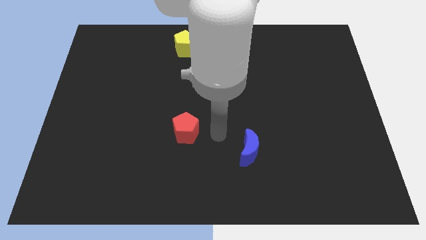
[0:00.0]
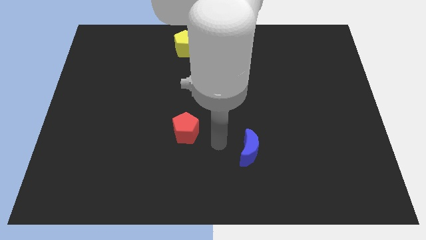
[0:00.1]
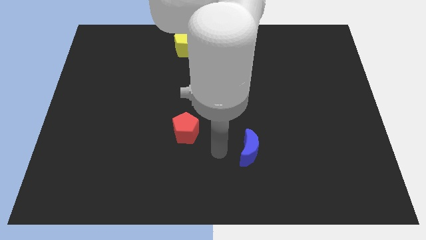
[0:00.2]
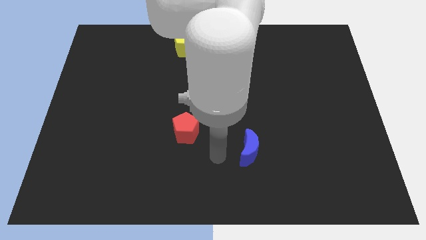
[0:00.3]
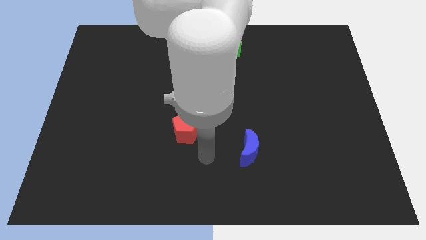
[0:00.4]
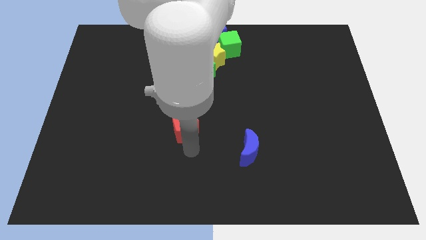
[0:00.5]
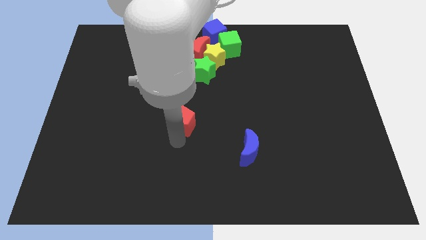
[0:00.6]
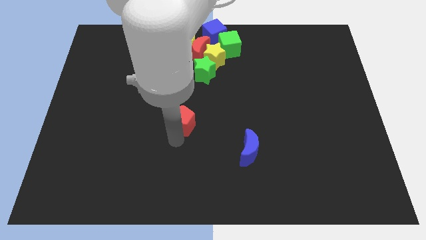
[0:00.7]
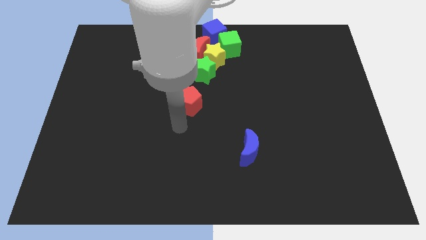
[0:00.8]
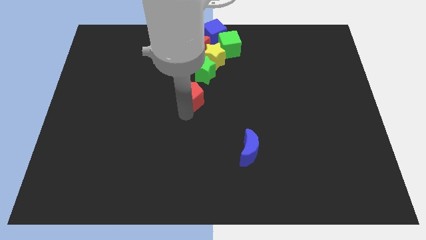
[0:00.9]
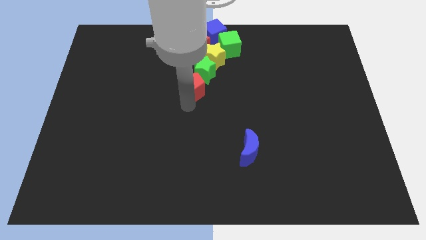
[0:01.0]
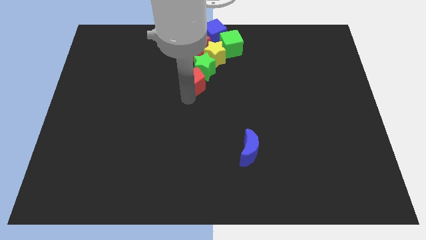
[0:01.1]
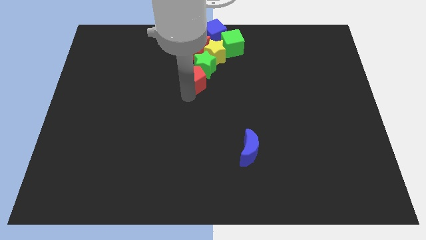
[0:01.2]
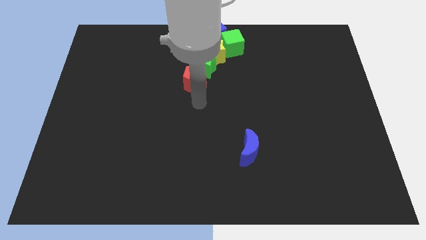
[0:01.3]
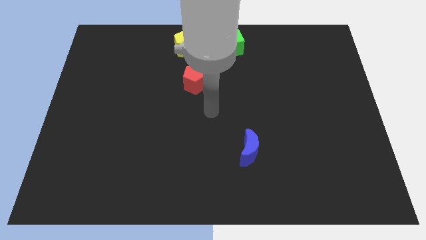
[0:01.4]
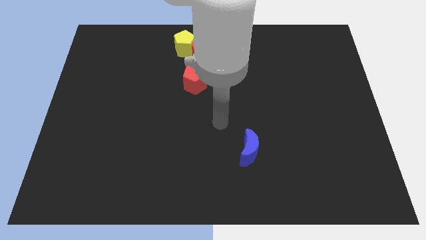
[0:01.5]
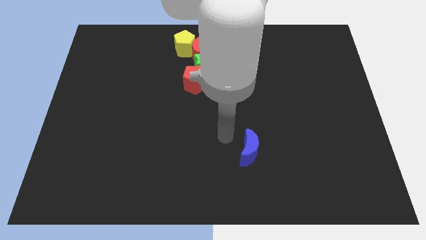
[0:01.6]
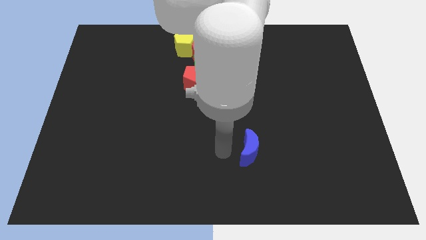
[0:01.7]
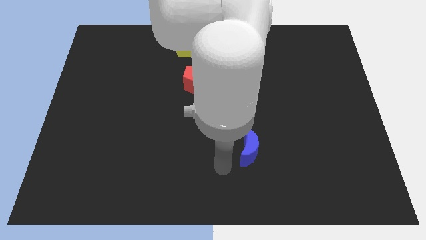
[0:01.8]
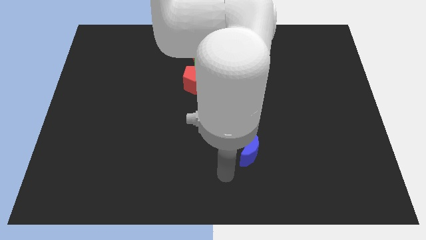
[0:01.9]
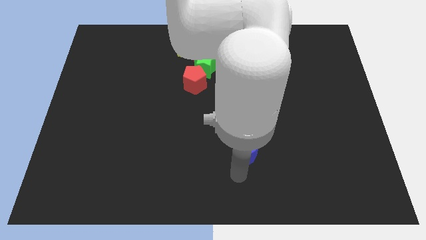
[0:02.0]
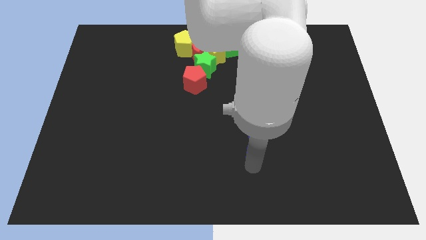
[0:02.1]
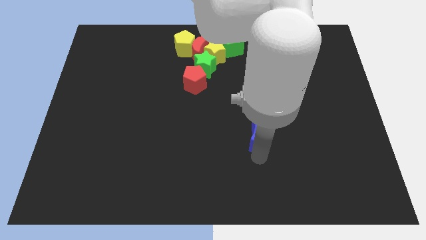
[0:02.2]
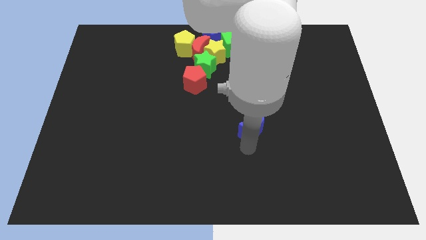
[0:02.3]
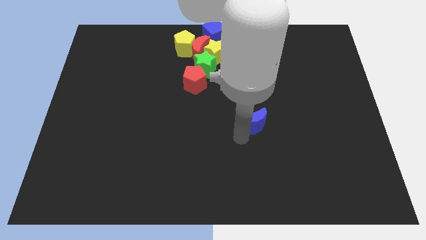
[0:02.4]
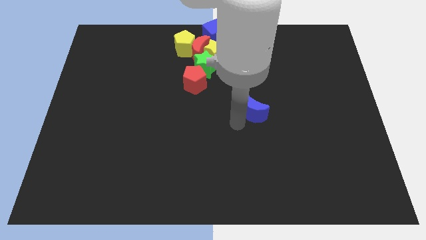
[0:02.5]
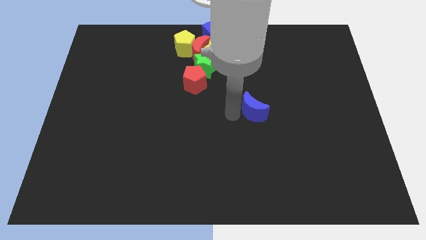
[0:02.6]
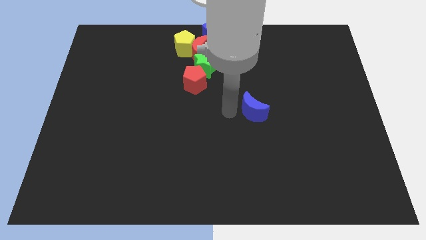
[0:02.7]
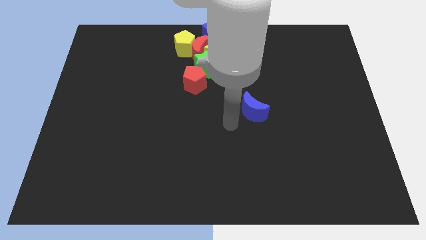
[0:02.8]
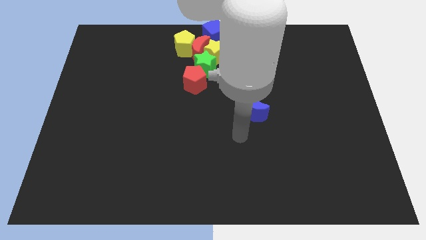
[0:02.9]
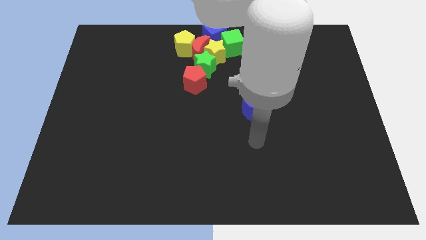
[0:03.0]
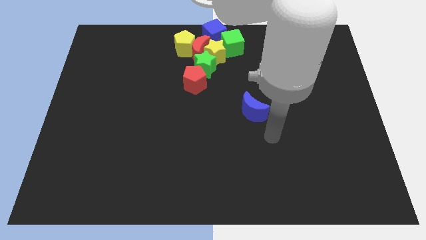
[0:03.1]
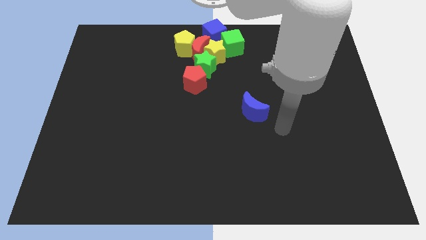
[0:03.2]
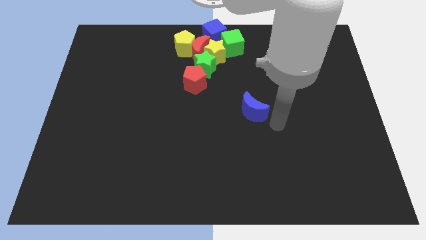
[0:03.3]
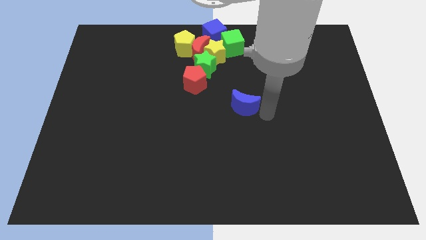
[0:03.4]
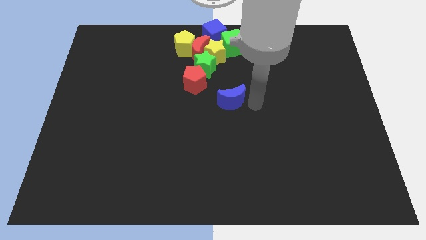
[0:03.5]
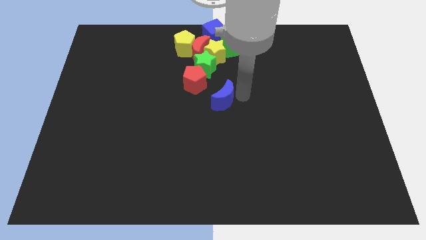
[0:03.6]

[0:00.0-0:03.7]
place the red pentagon towards the bottom left side of the green star

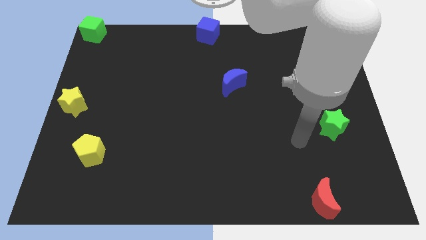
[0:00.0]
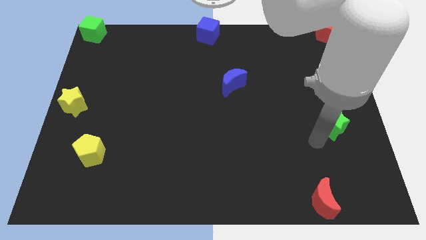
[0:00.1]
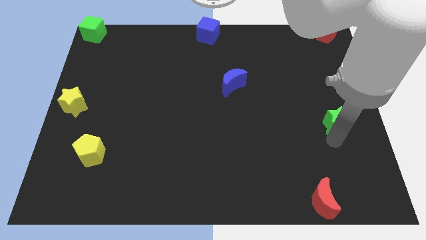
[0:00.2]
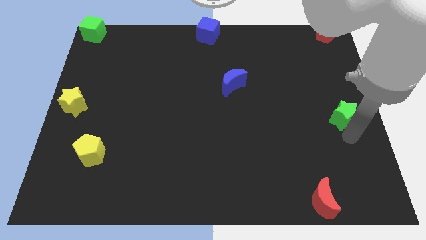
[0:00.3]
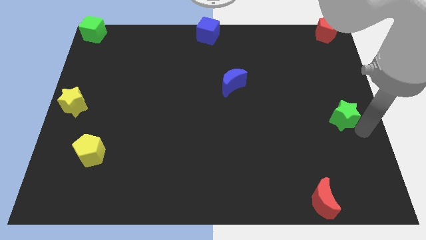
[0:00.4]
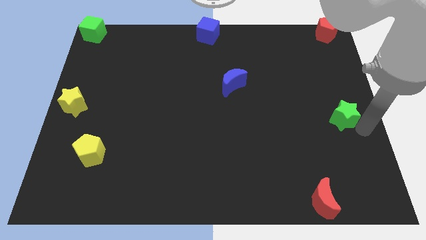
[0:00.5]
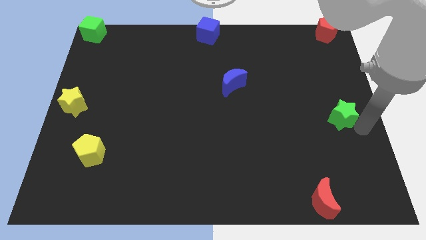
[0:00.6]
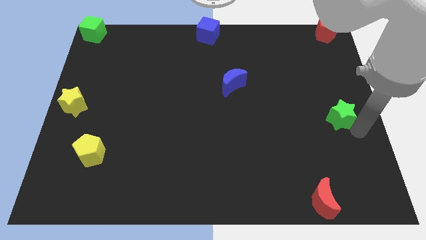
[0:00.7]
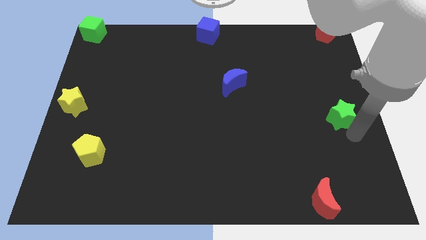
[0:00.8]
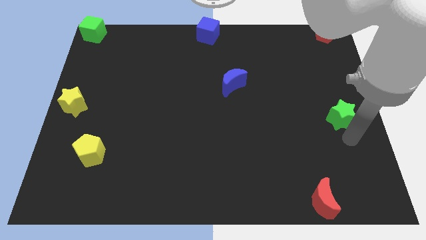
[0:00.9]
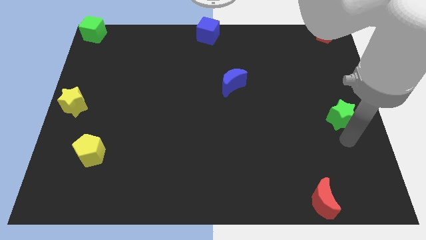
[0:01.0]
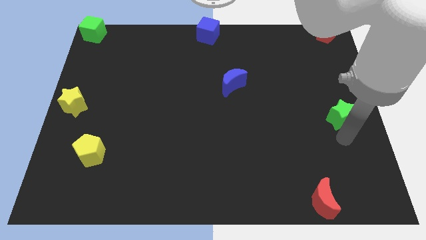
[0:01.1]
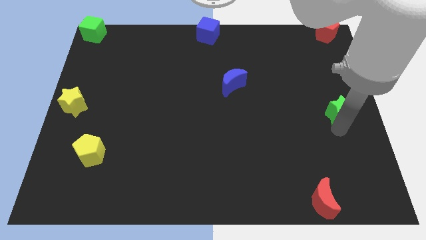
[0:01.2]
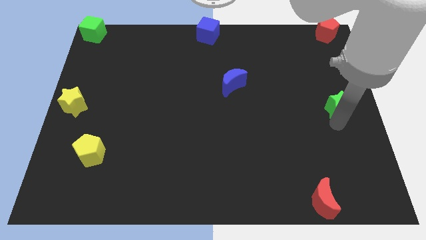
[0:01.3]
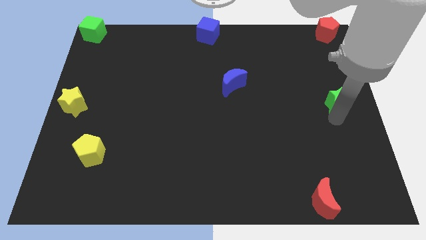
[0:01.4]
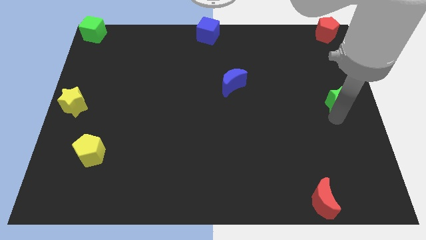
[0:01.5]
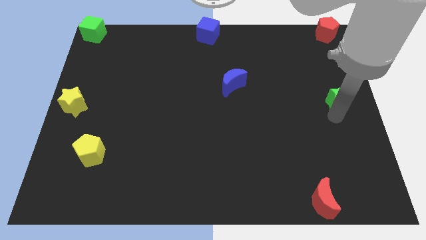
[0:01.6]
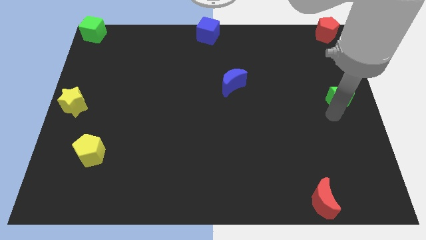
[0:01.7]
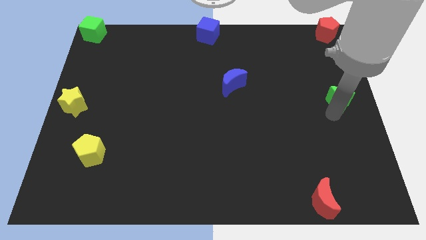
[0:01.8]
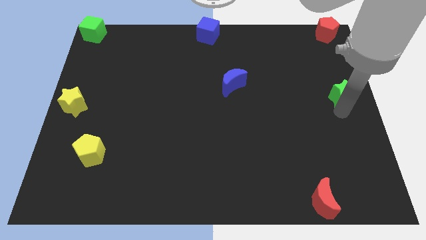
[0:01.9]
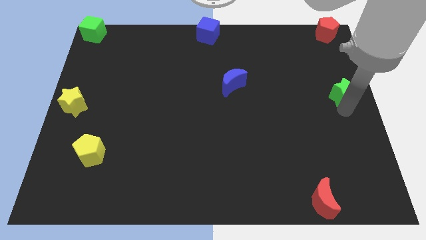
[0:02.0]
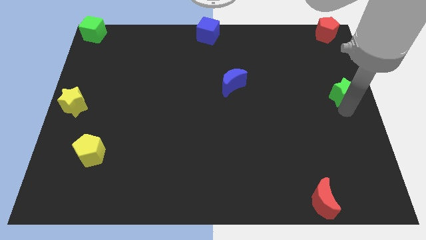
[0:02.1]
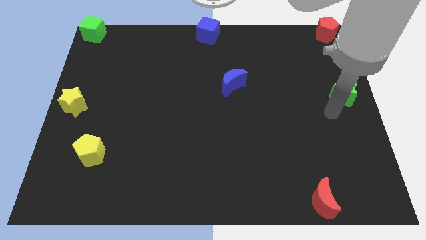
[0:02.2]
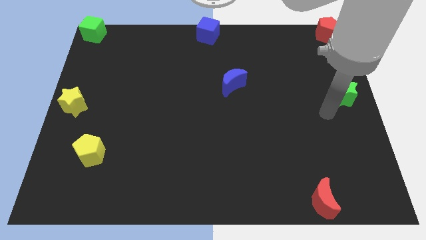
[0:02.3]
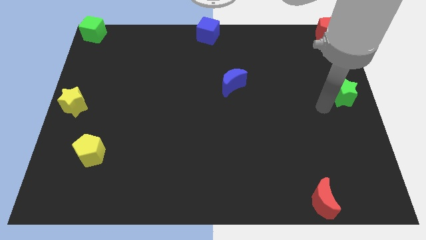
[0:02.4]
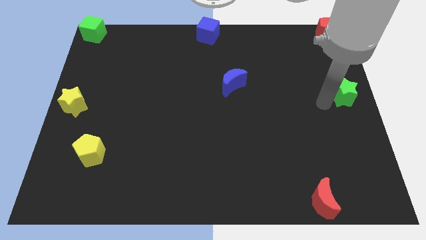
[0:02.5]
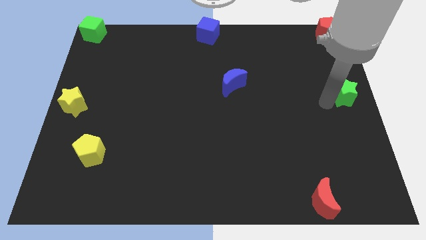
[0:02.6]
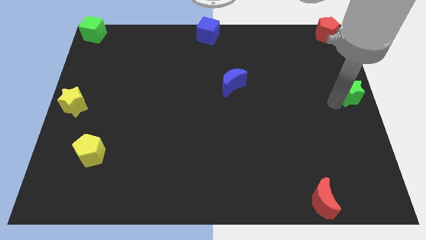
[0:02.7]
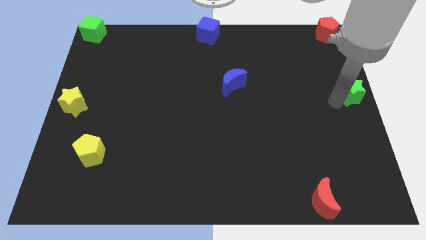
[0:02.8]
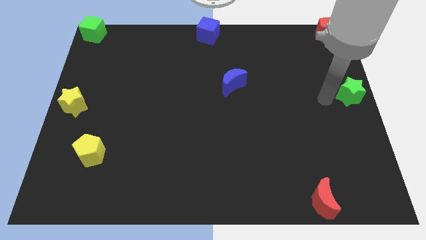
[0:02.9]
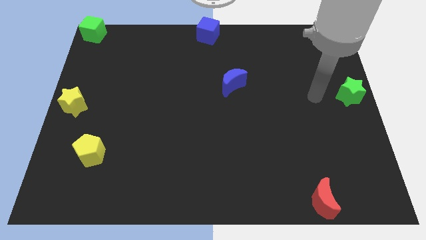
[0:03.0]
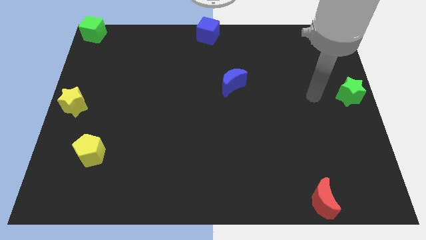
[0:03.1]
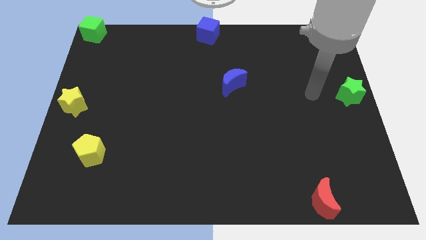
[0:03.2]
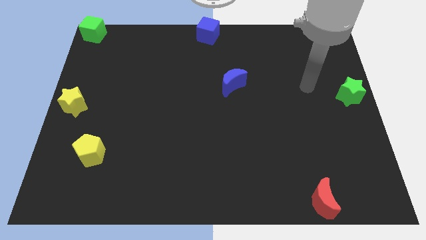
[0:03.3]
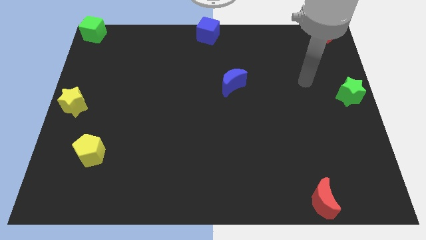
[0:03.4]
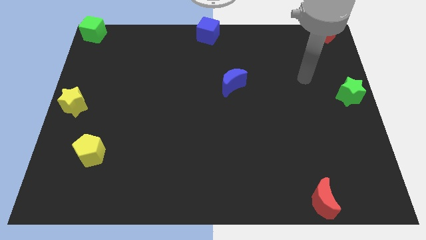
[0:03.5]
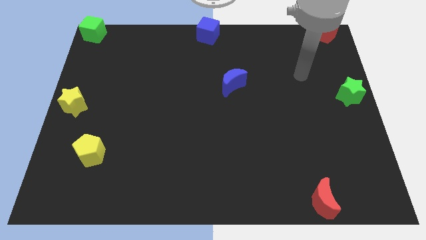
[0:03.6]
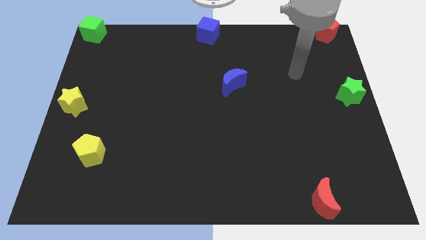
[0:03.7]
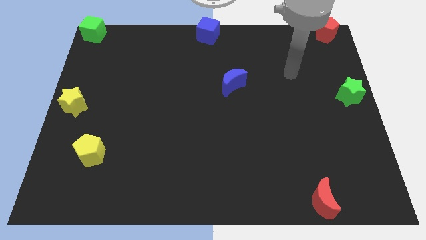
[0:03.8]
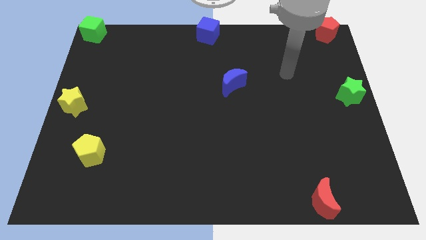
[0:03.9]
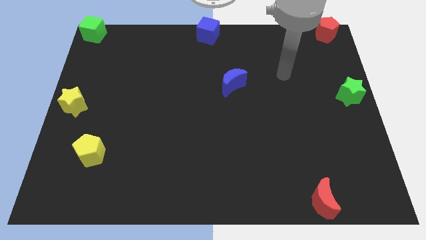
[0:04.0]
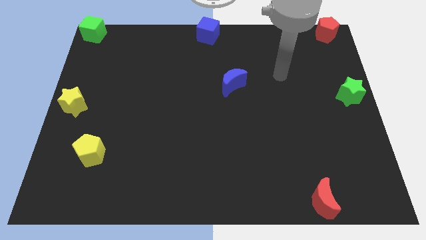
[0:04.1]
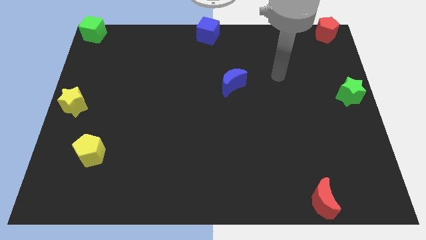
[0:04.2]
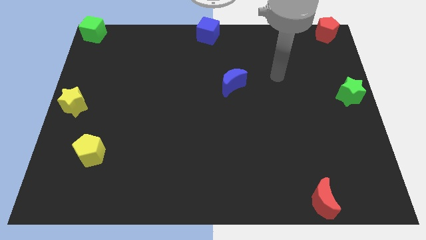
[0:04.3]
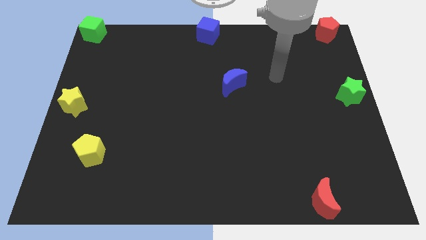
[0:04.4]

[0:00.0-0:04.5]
move your arm away from the green star

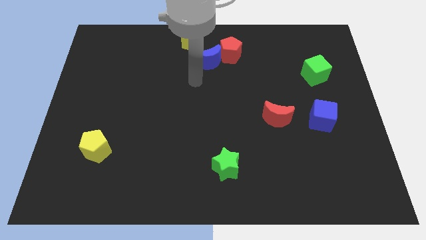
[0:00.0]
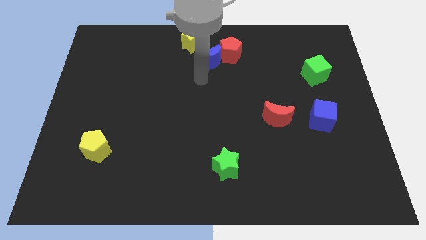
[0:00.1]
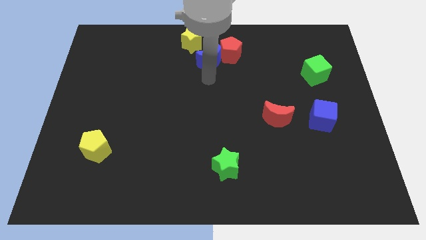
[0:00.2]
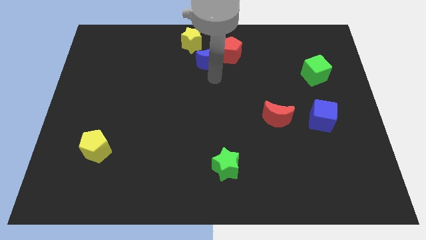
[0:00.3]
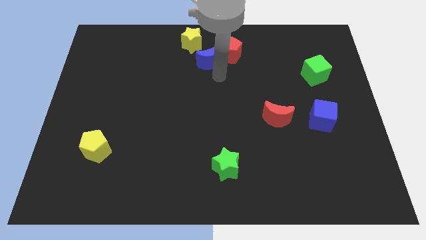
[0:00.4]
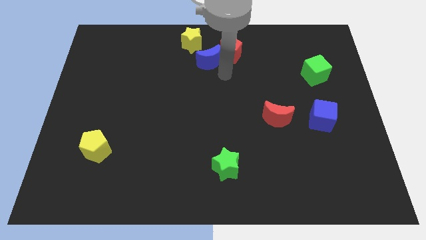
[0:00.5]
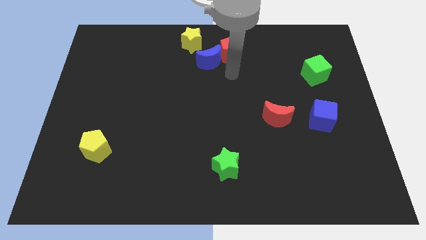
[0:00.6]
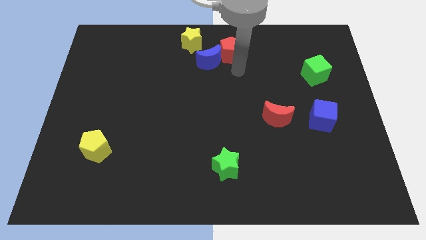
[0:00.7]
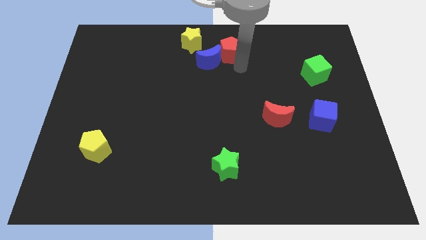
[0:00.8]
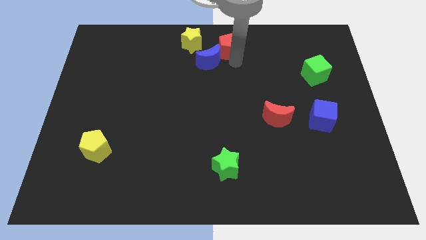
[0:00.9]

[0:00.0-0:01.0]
place the arm down to the red pentagon
